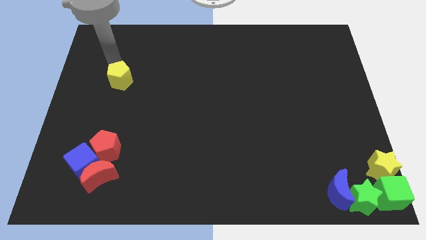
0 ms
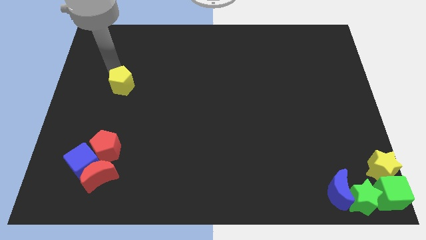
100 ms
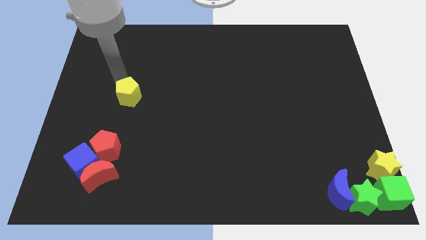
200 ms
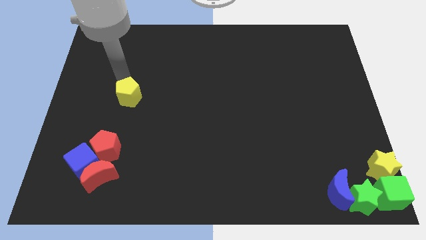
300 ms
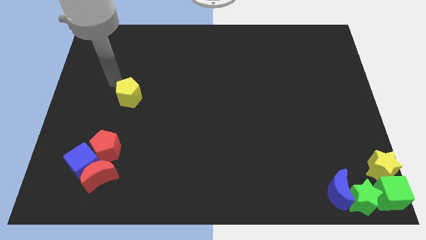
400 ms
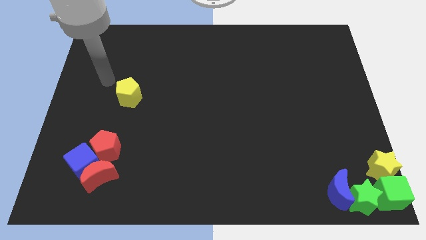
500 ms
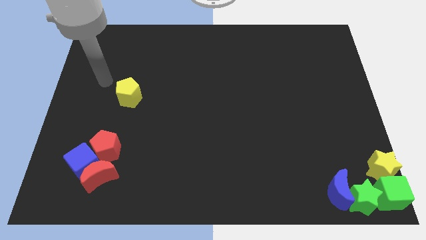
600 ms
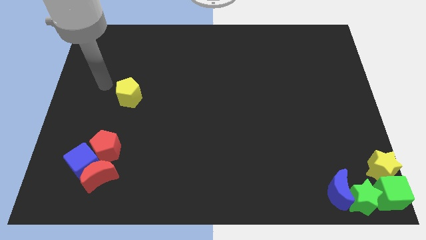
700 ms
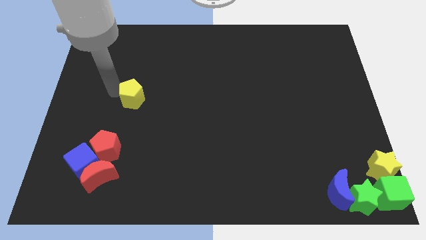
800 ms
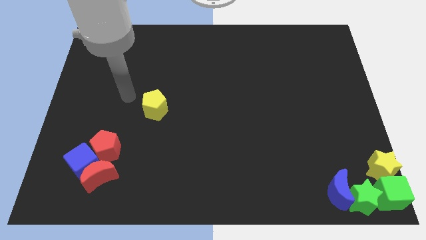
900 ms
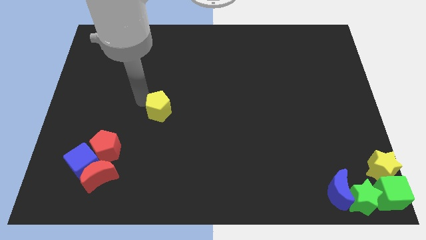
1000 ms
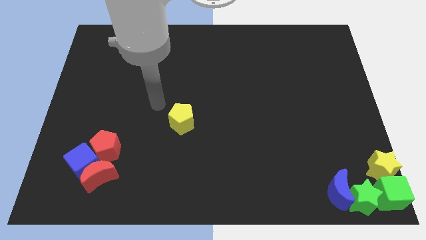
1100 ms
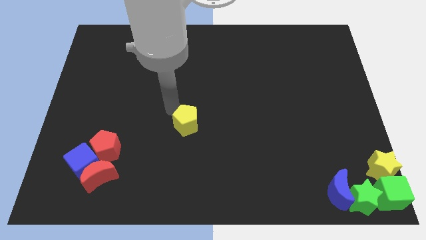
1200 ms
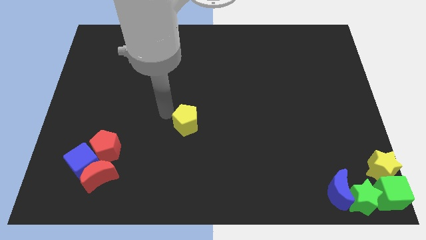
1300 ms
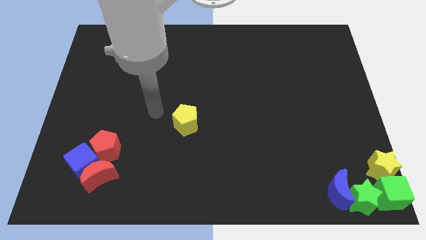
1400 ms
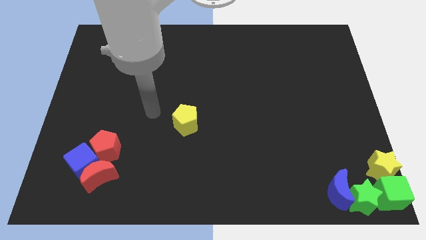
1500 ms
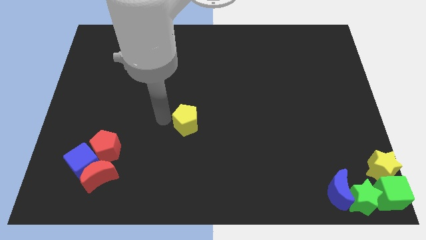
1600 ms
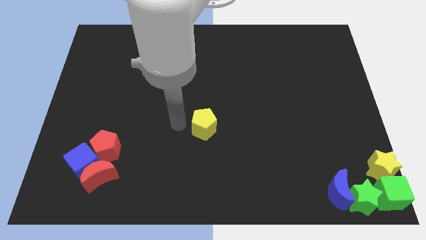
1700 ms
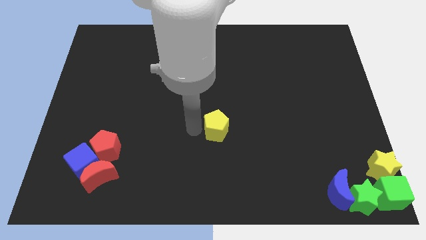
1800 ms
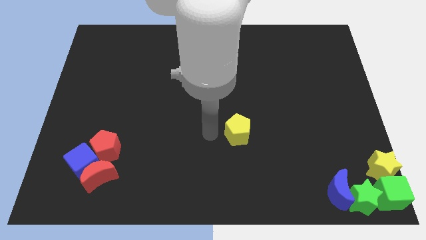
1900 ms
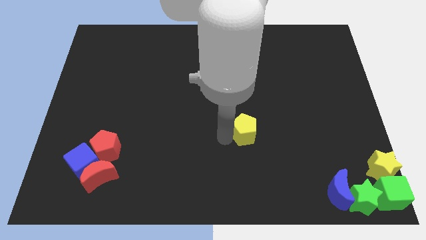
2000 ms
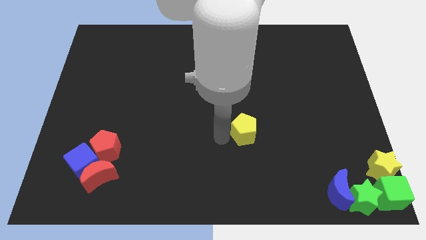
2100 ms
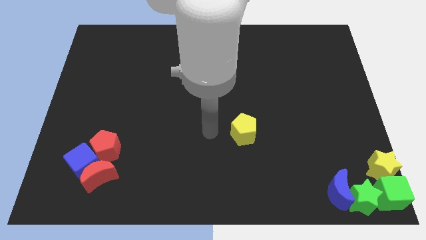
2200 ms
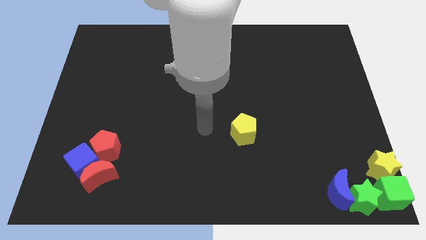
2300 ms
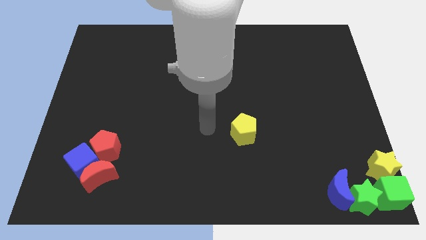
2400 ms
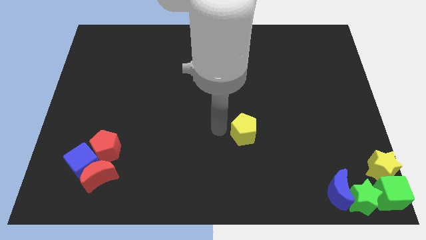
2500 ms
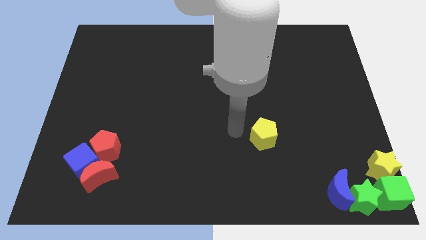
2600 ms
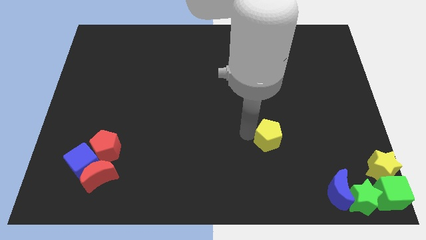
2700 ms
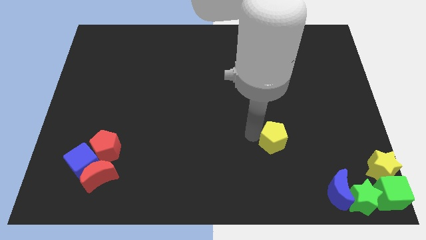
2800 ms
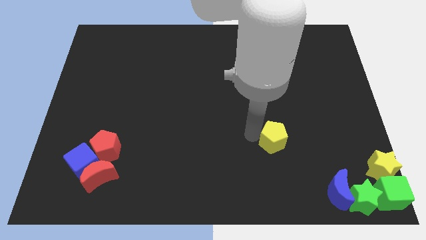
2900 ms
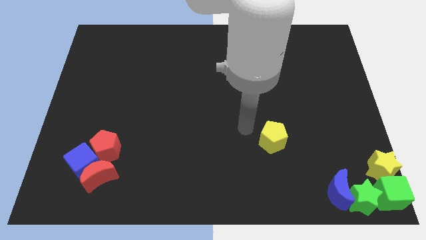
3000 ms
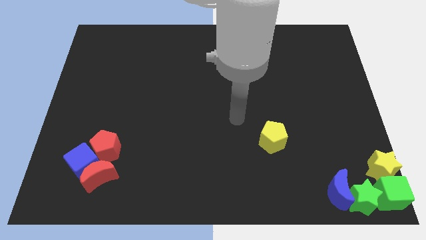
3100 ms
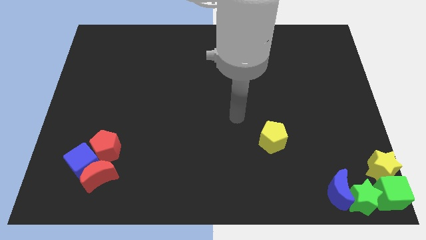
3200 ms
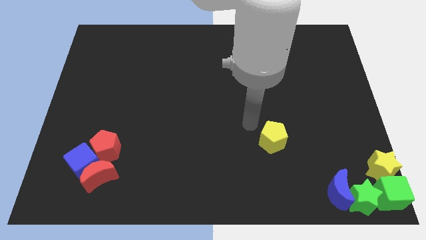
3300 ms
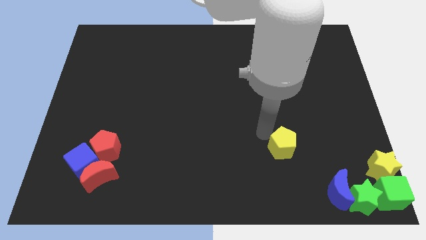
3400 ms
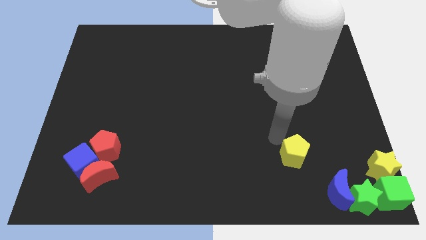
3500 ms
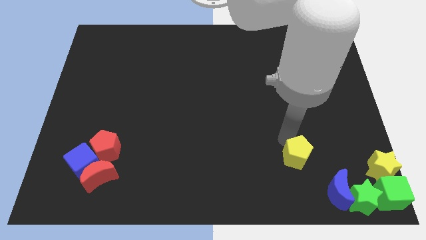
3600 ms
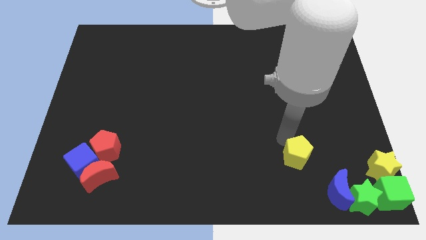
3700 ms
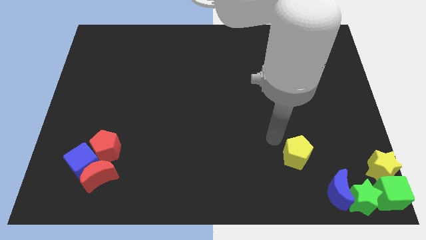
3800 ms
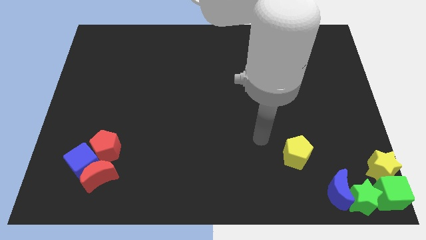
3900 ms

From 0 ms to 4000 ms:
move the yellow pentagon towards the bottom right

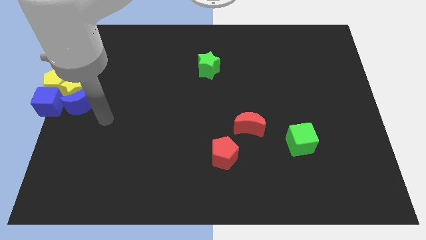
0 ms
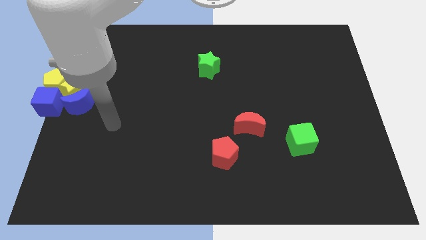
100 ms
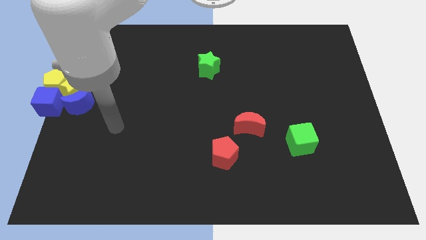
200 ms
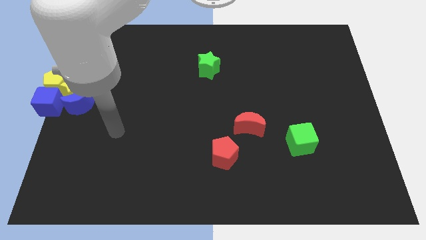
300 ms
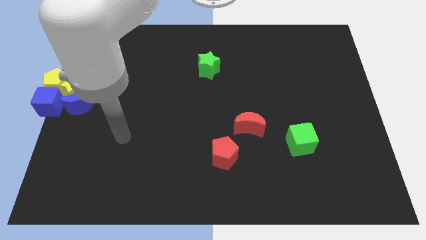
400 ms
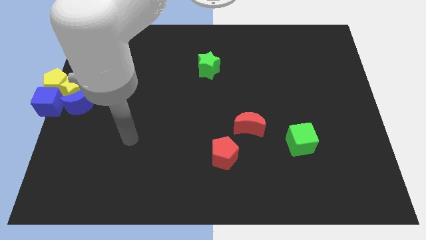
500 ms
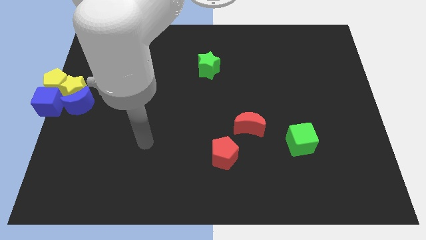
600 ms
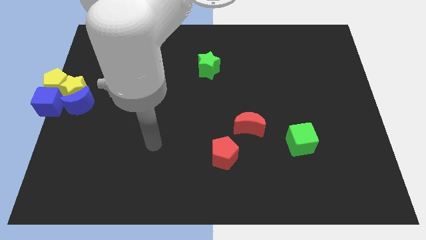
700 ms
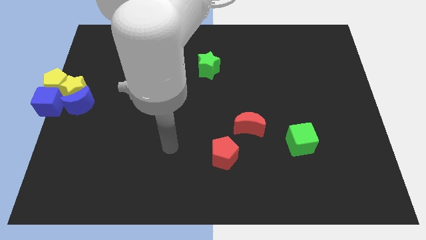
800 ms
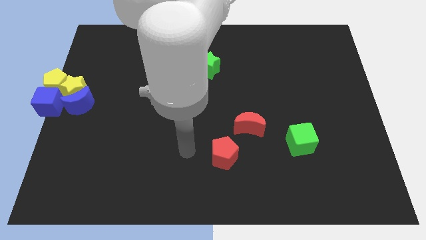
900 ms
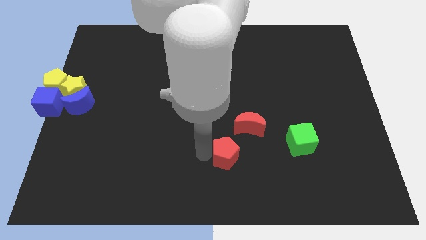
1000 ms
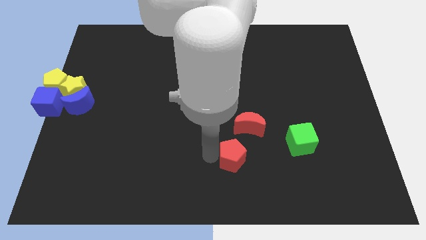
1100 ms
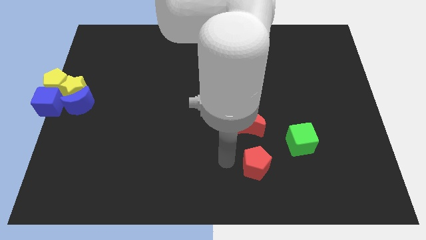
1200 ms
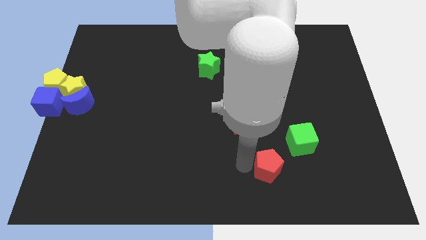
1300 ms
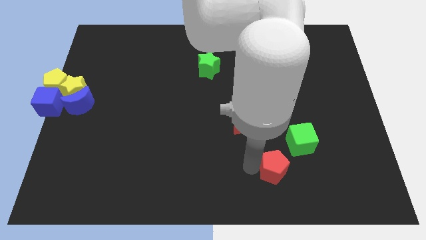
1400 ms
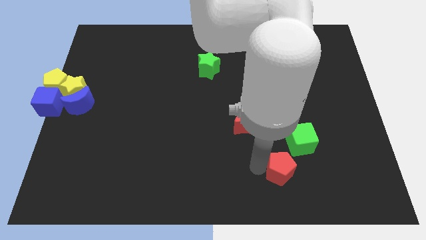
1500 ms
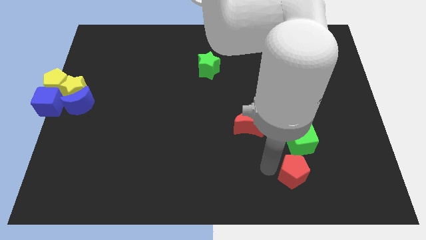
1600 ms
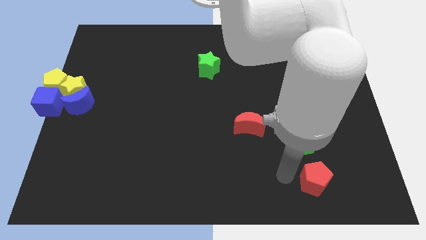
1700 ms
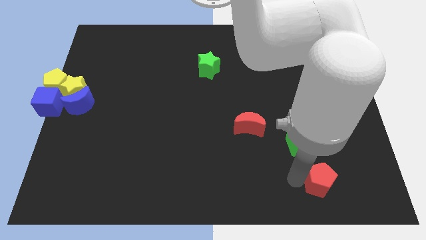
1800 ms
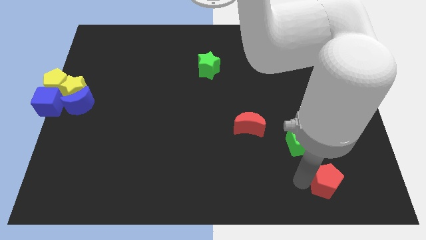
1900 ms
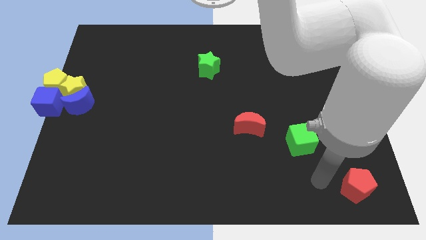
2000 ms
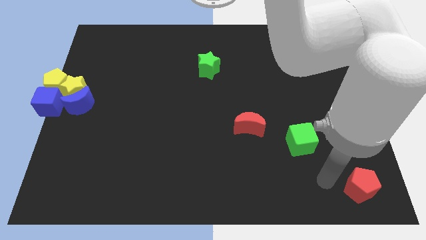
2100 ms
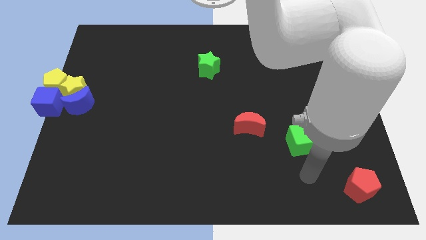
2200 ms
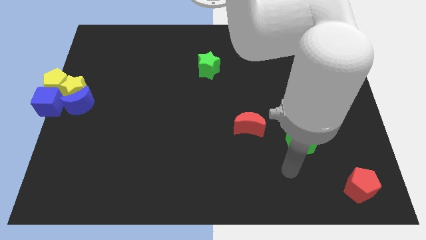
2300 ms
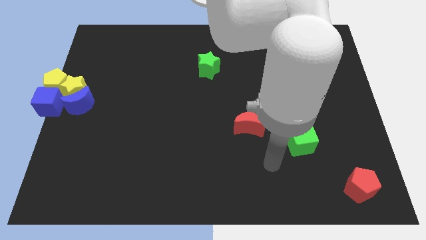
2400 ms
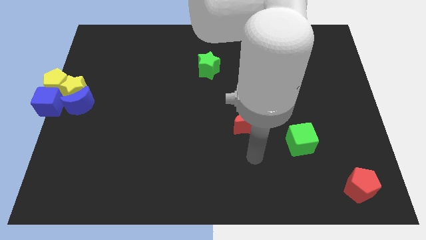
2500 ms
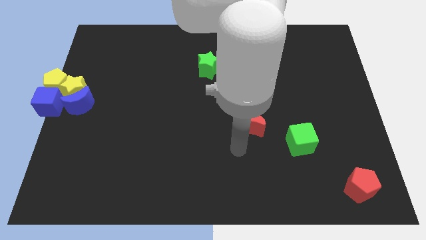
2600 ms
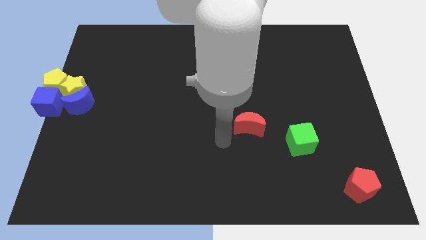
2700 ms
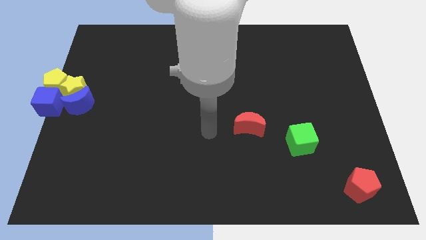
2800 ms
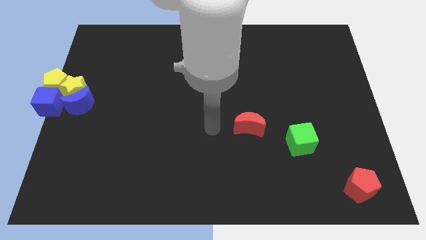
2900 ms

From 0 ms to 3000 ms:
place the red pentagon to the bottom right of the board

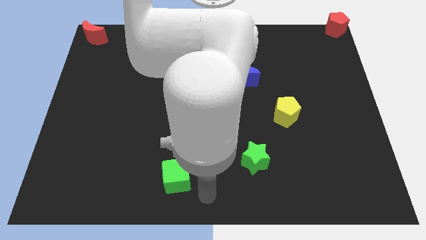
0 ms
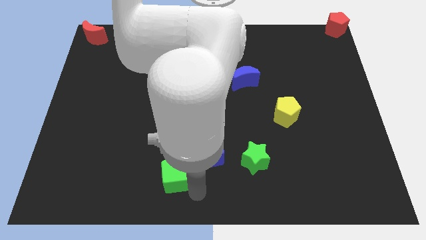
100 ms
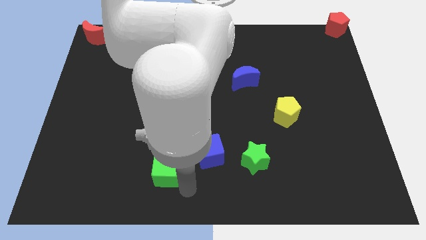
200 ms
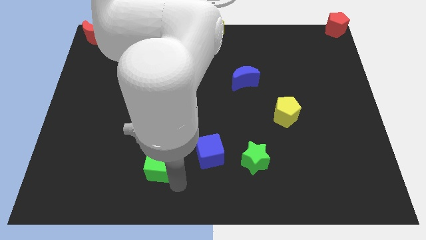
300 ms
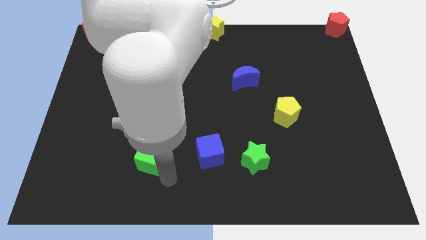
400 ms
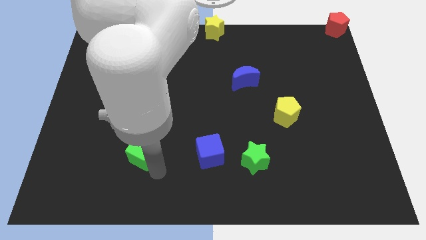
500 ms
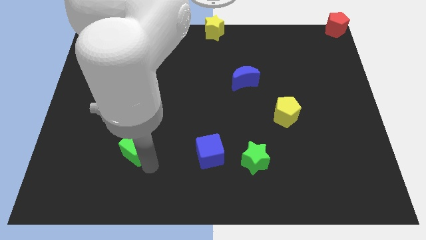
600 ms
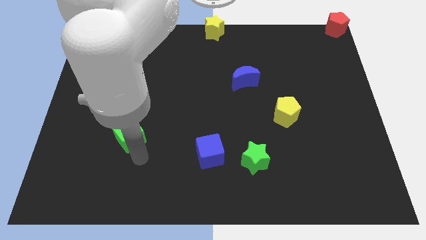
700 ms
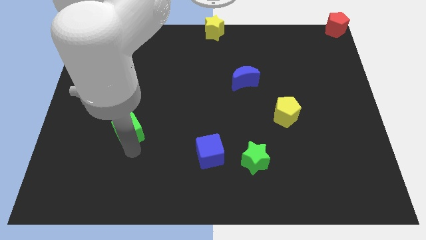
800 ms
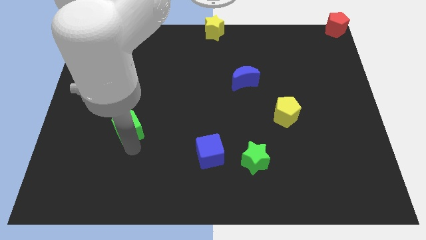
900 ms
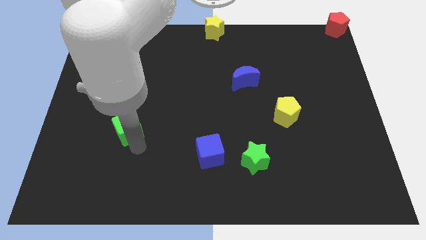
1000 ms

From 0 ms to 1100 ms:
separate green cube from blue cube

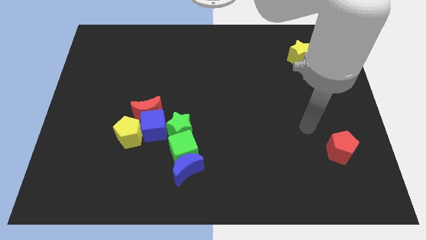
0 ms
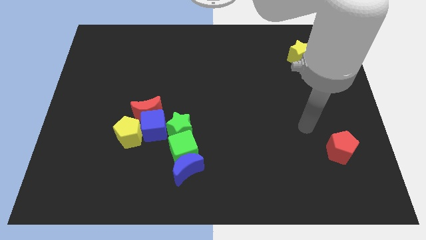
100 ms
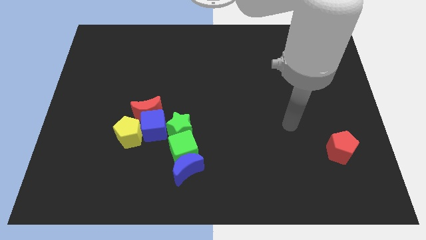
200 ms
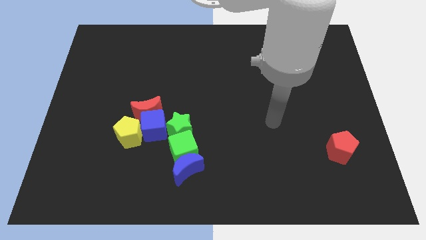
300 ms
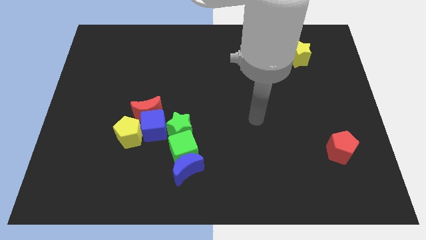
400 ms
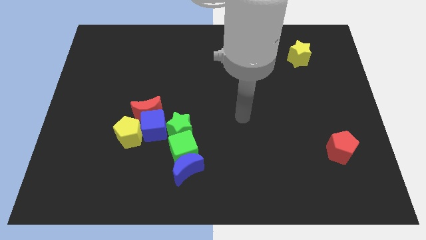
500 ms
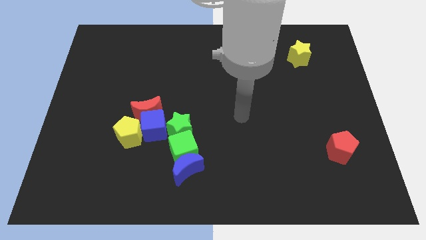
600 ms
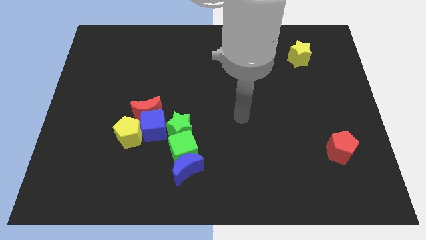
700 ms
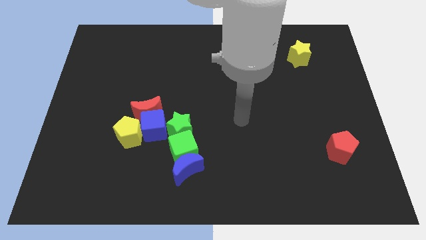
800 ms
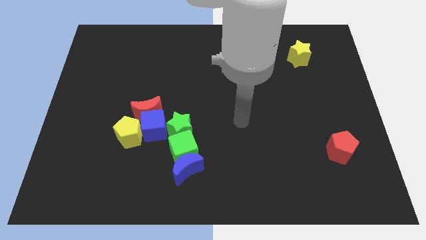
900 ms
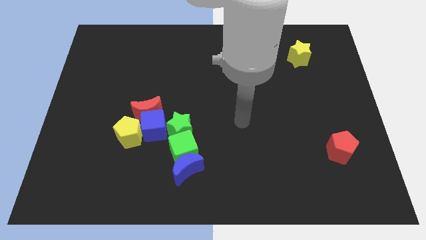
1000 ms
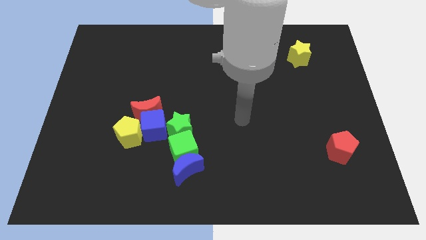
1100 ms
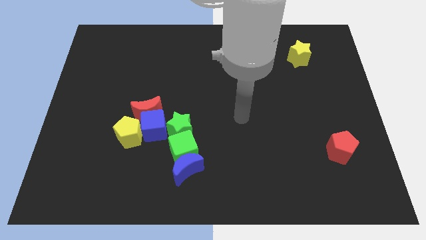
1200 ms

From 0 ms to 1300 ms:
point your arm at the center of the board
